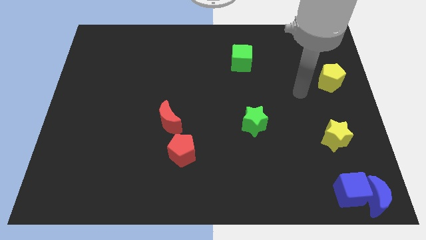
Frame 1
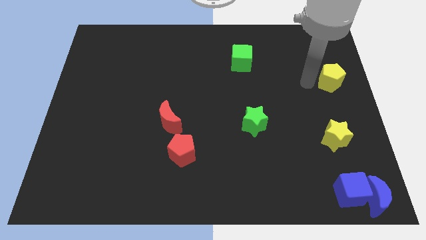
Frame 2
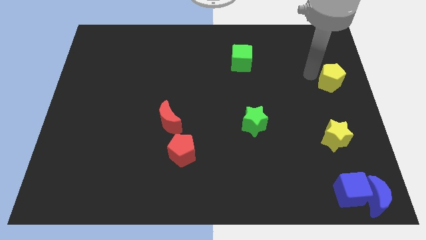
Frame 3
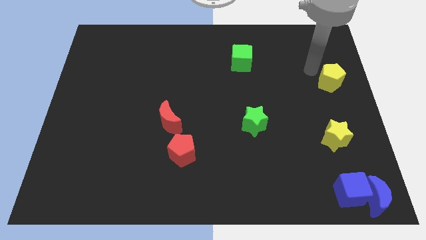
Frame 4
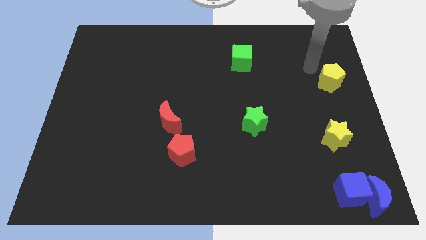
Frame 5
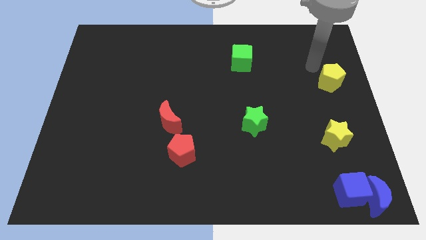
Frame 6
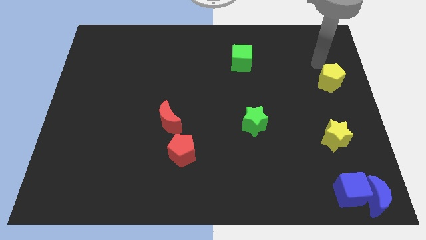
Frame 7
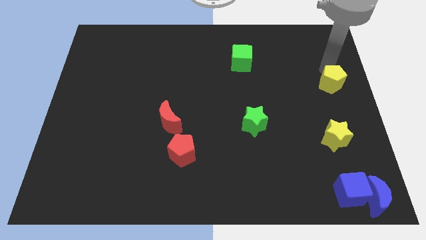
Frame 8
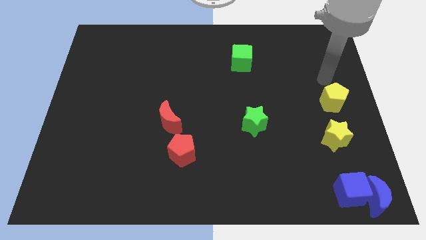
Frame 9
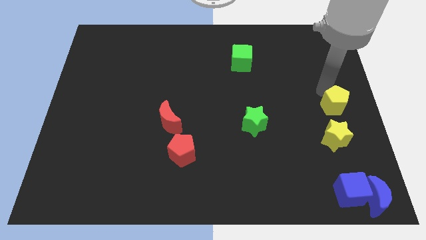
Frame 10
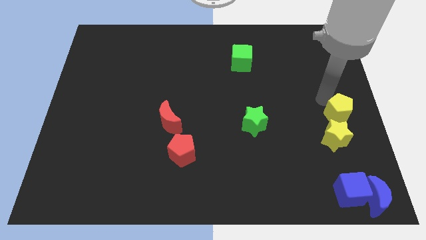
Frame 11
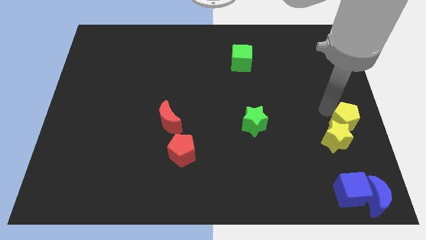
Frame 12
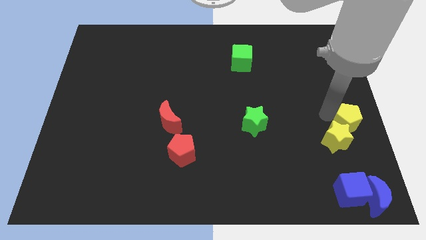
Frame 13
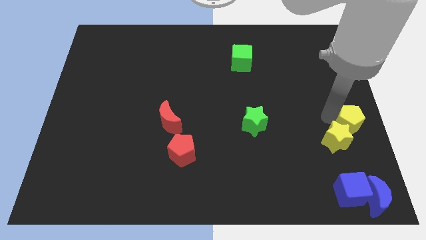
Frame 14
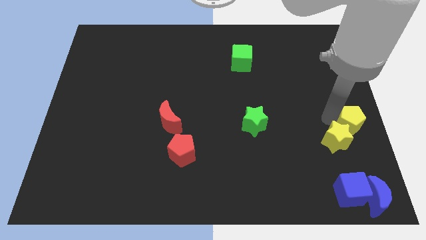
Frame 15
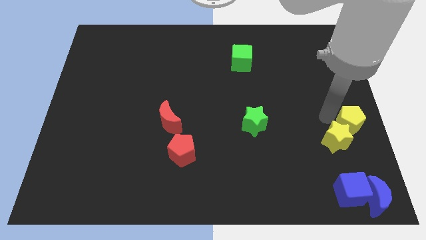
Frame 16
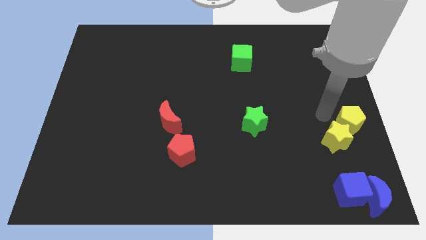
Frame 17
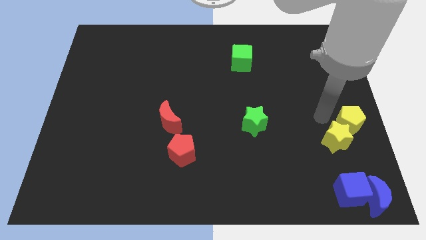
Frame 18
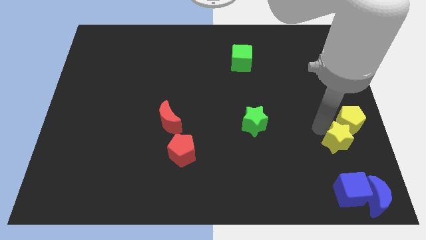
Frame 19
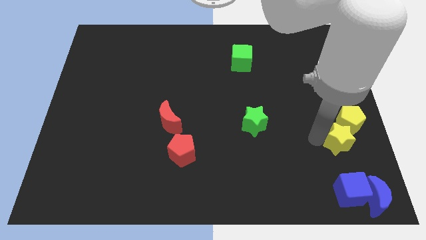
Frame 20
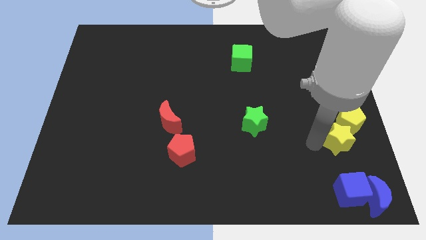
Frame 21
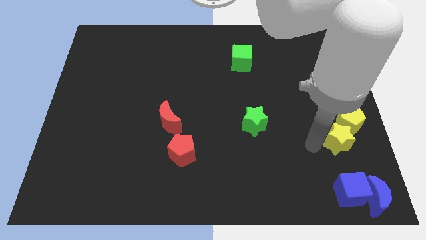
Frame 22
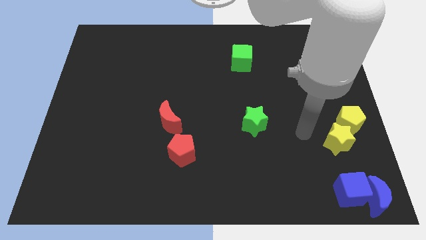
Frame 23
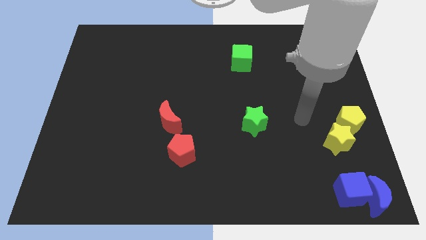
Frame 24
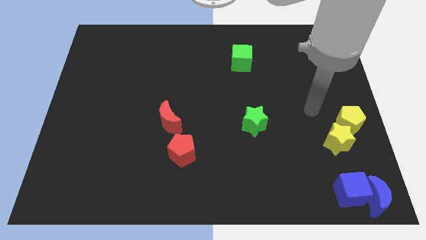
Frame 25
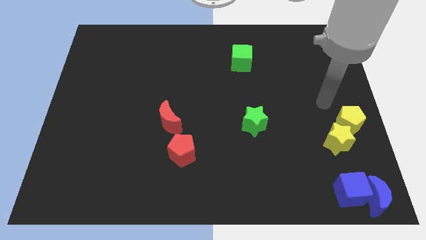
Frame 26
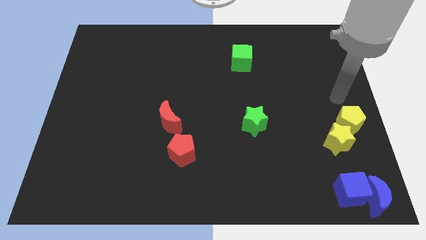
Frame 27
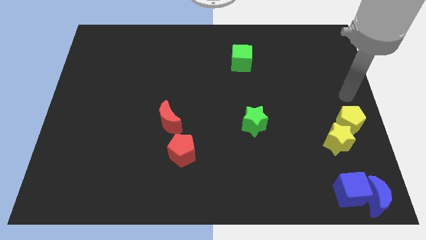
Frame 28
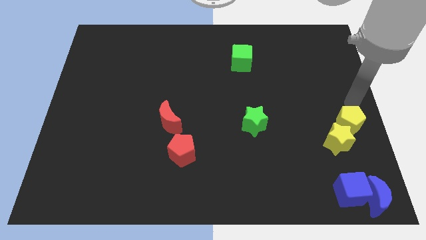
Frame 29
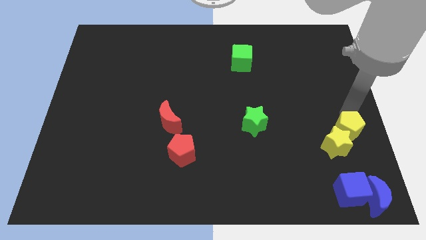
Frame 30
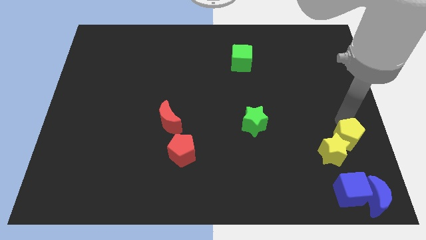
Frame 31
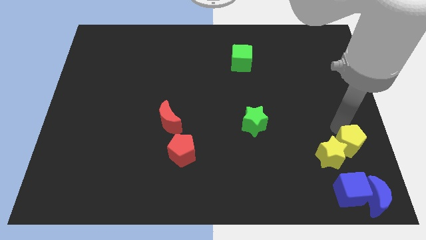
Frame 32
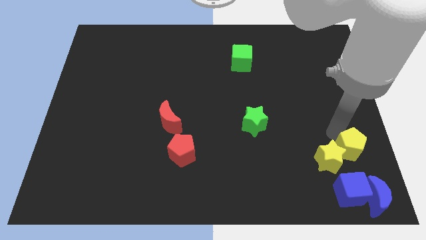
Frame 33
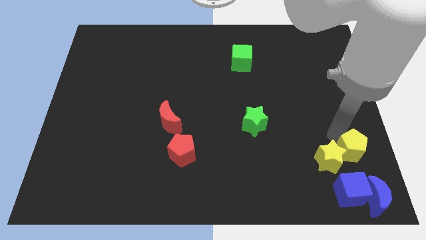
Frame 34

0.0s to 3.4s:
push the yellow blocks close to the blue blocks

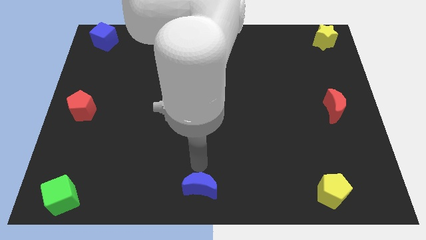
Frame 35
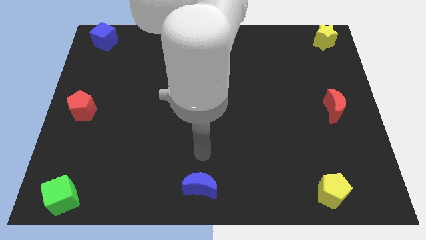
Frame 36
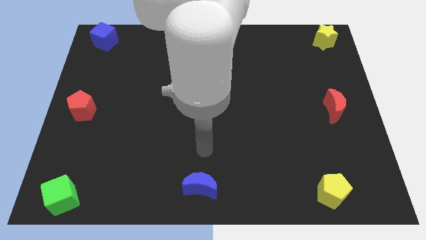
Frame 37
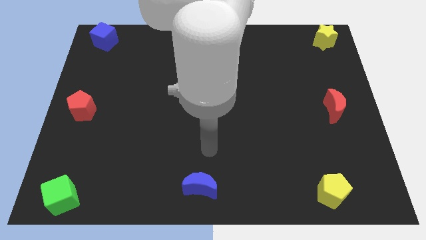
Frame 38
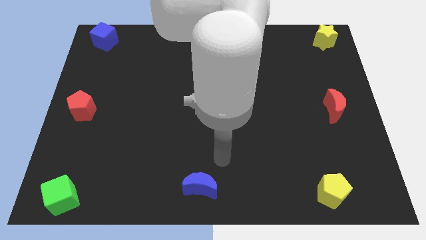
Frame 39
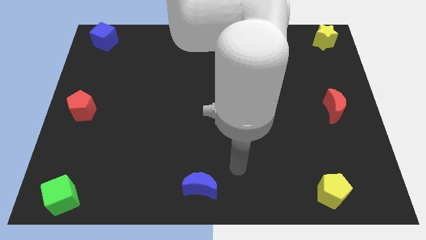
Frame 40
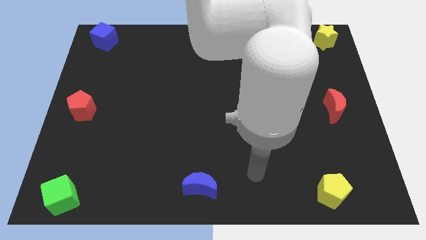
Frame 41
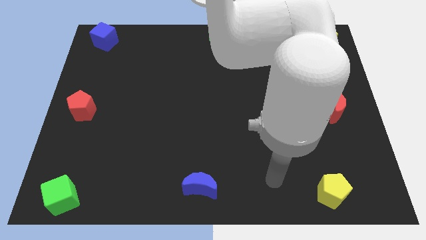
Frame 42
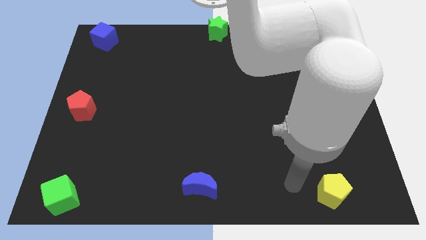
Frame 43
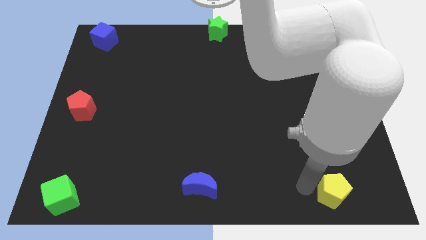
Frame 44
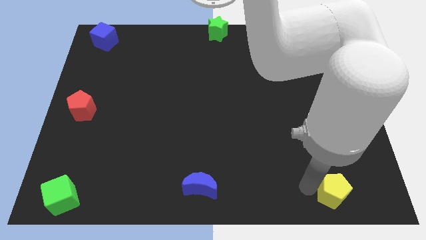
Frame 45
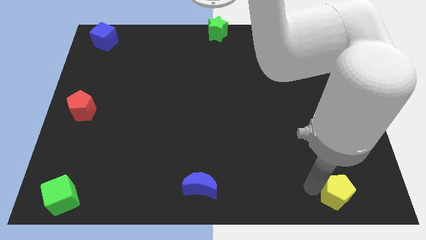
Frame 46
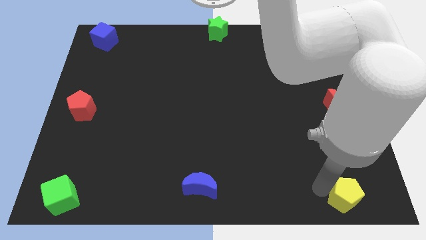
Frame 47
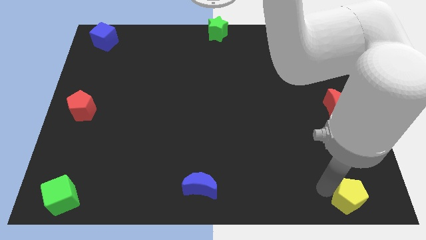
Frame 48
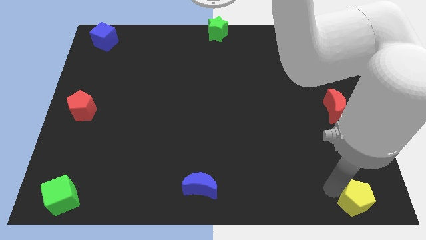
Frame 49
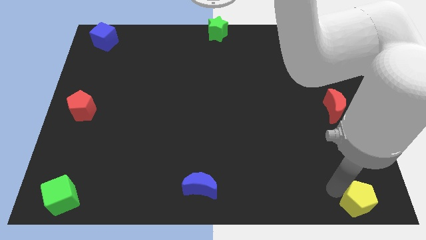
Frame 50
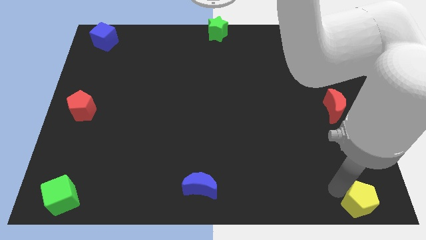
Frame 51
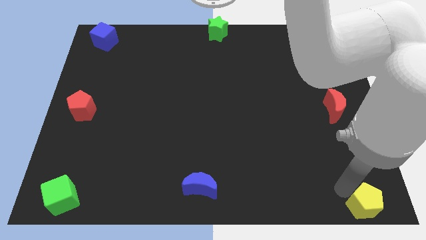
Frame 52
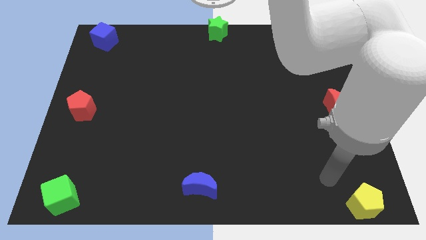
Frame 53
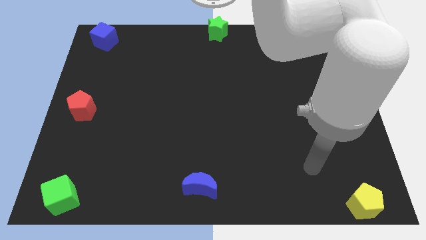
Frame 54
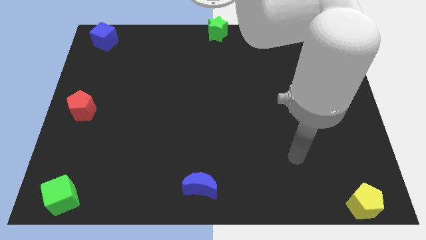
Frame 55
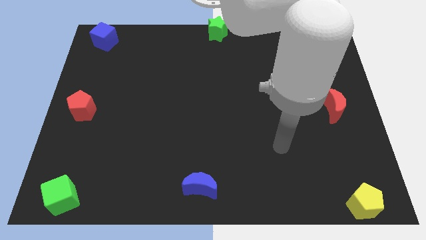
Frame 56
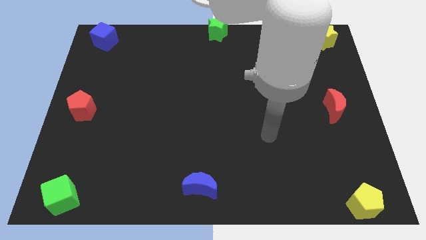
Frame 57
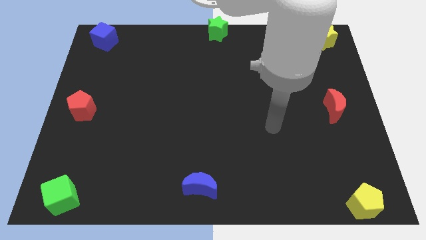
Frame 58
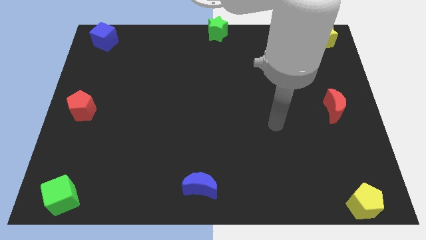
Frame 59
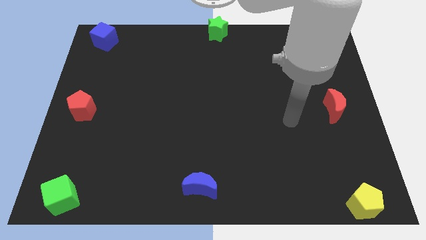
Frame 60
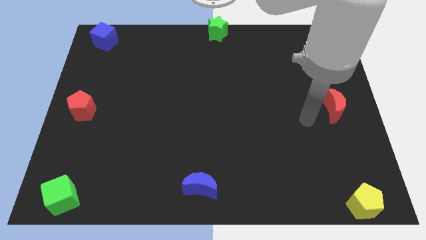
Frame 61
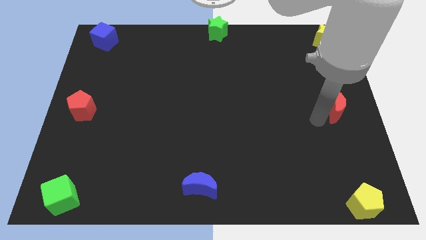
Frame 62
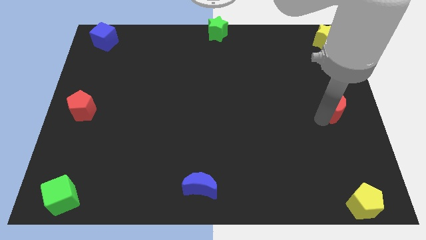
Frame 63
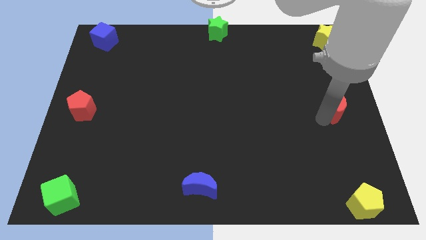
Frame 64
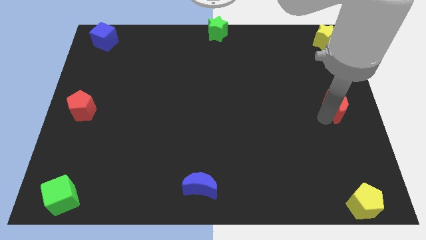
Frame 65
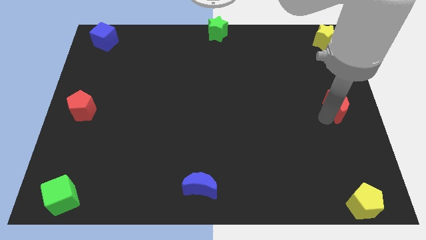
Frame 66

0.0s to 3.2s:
place yellow pentagon towards bottom right end

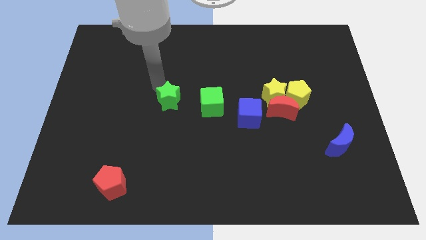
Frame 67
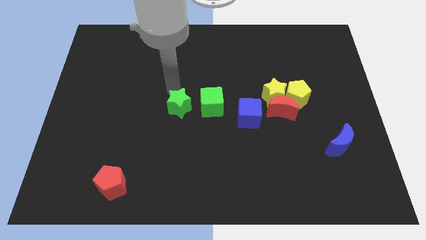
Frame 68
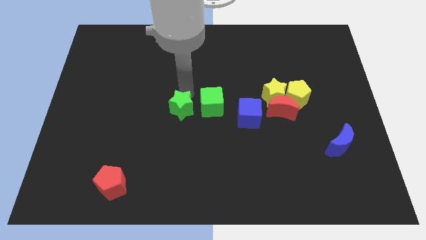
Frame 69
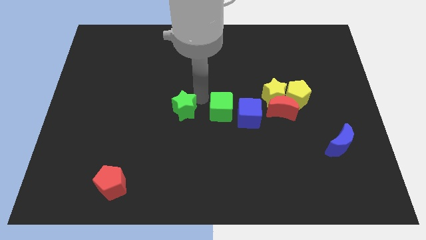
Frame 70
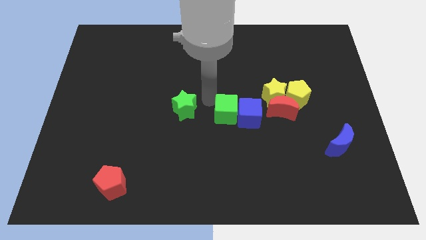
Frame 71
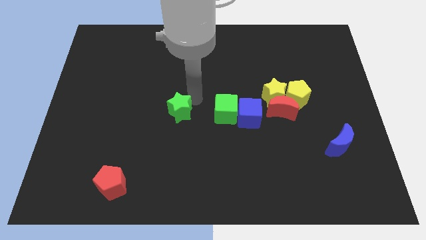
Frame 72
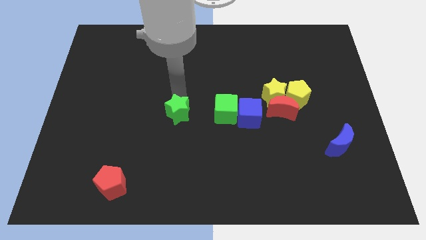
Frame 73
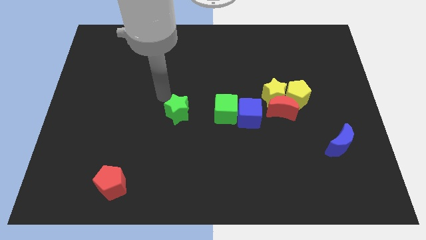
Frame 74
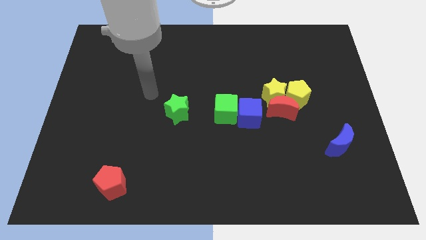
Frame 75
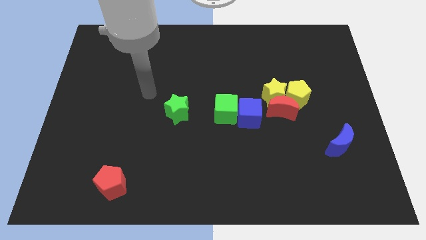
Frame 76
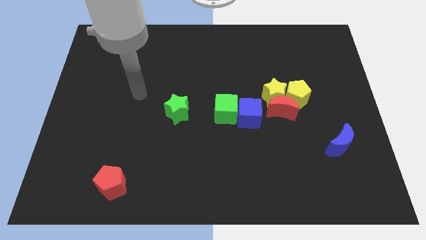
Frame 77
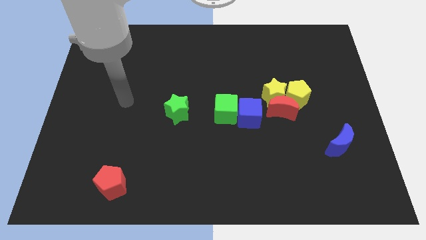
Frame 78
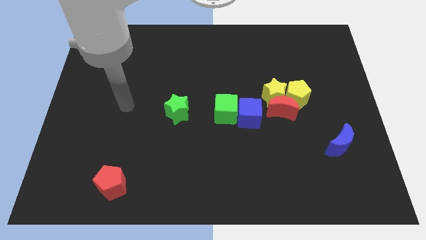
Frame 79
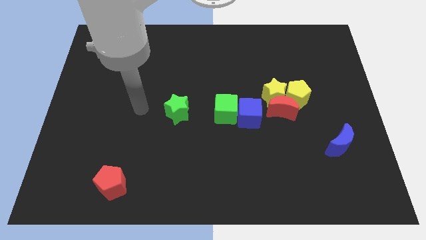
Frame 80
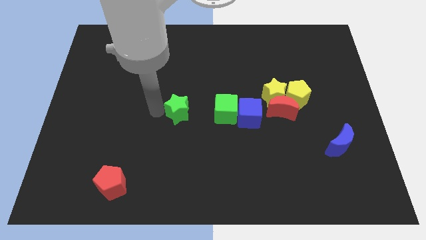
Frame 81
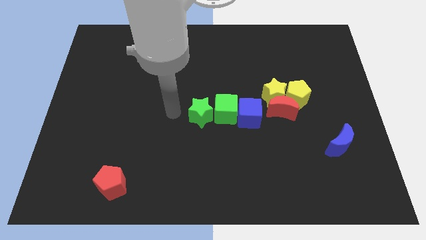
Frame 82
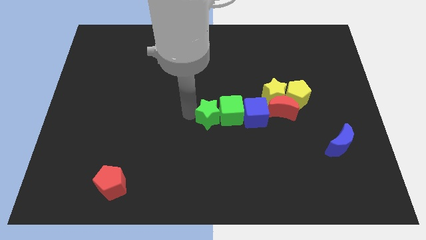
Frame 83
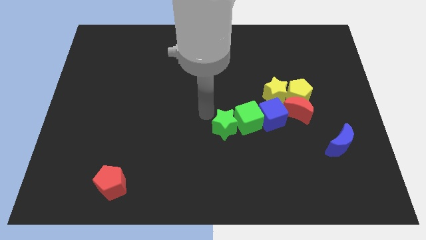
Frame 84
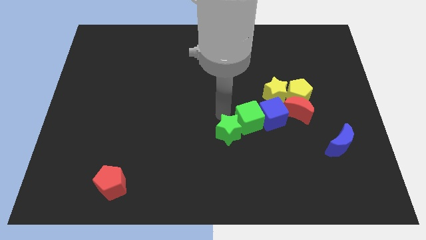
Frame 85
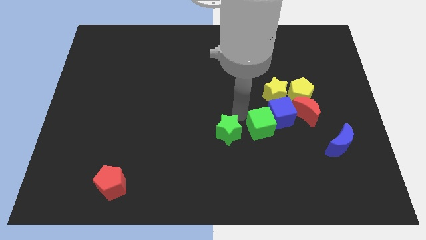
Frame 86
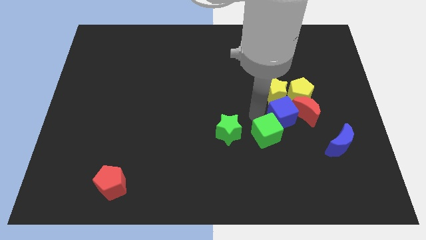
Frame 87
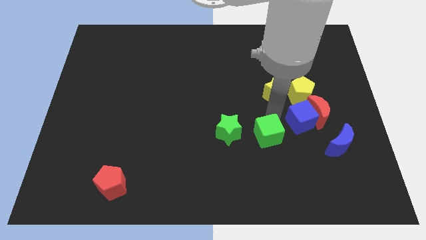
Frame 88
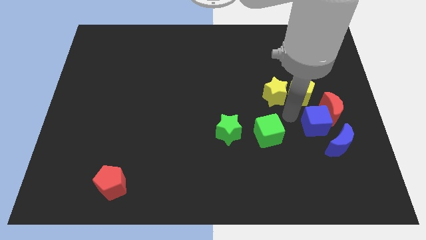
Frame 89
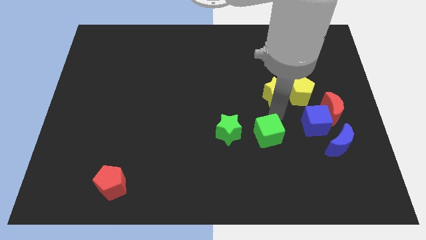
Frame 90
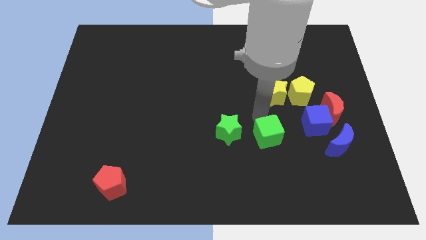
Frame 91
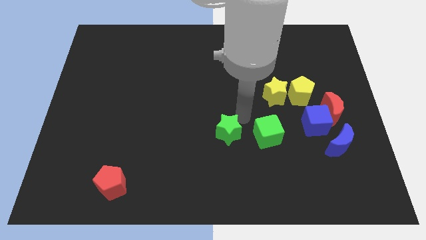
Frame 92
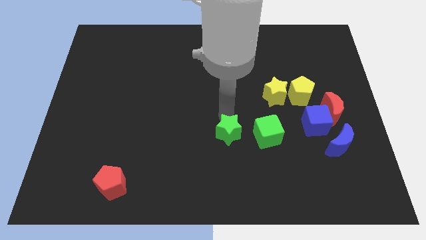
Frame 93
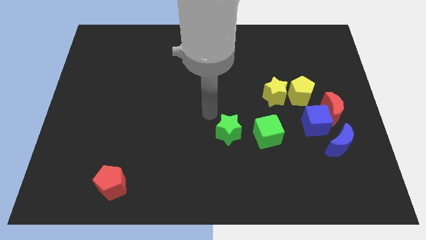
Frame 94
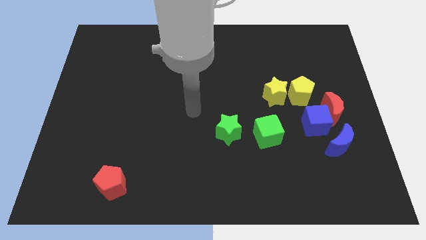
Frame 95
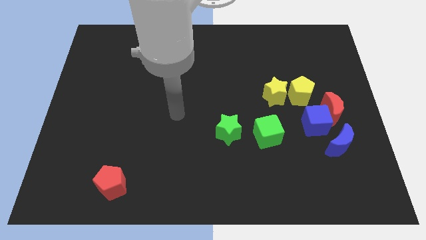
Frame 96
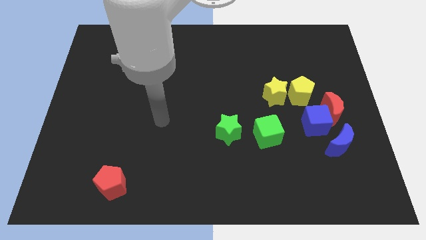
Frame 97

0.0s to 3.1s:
push green star and green cube towards bottom right
